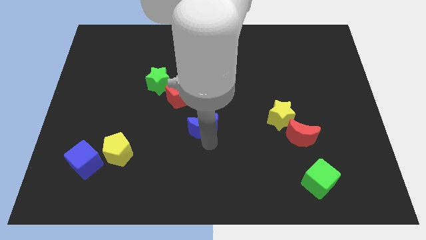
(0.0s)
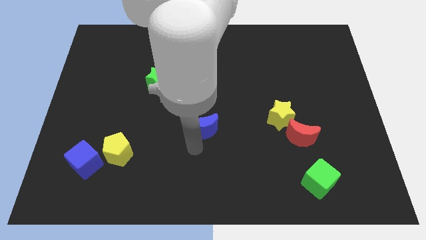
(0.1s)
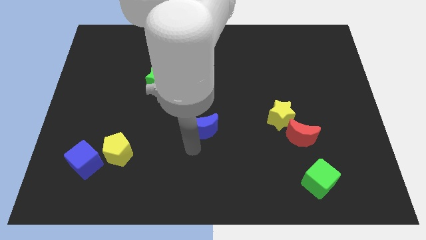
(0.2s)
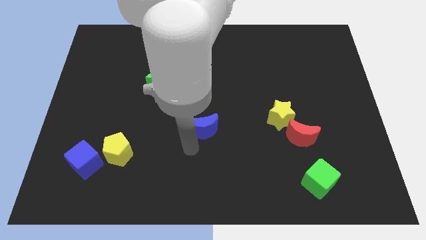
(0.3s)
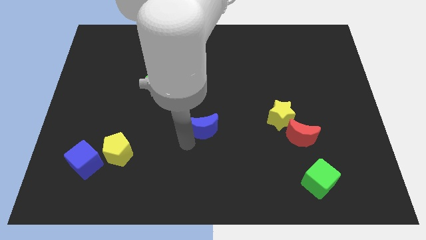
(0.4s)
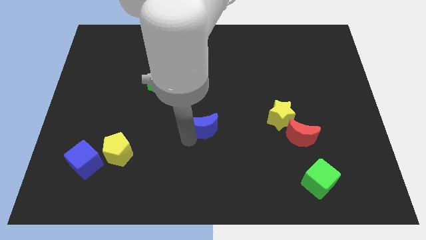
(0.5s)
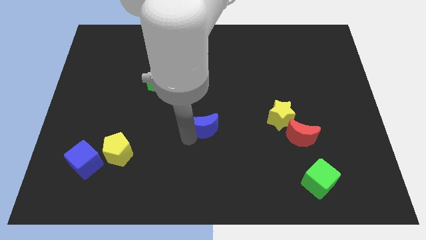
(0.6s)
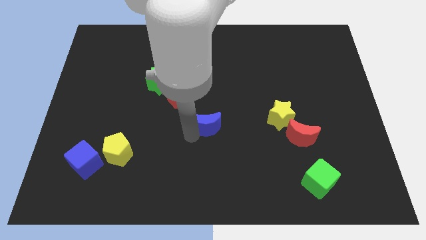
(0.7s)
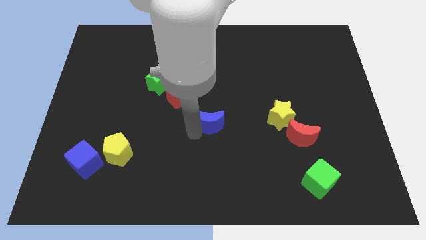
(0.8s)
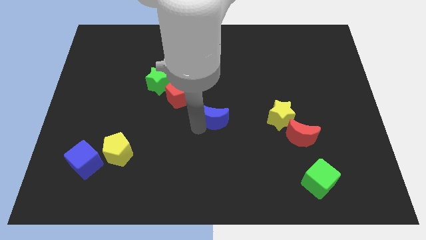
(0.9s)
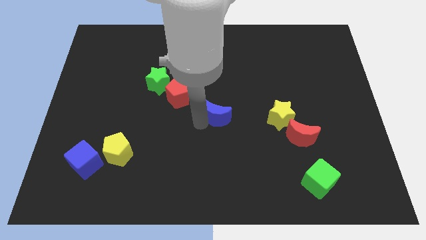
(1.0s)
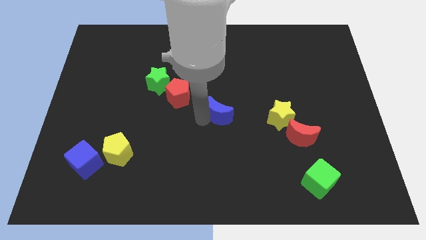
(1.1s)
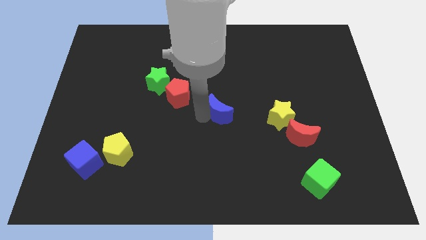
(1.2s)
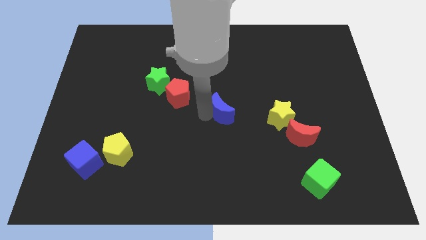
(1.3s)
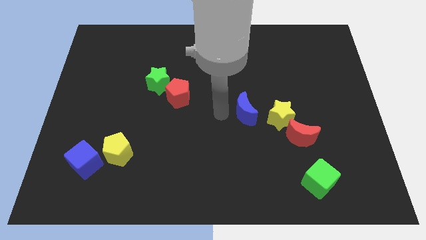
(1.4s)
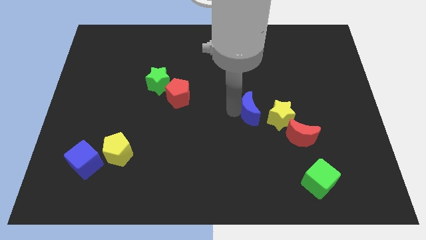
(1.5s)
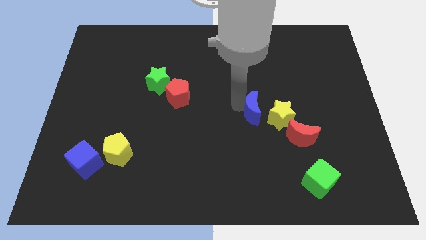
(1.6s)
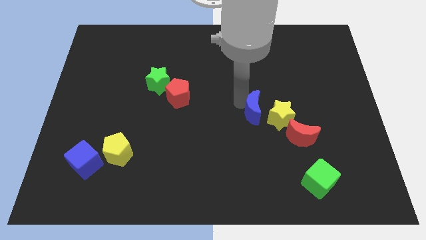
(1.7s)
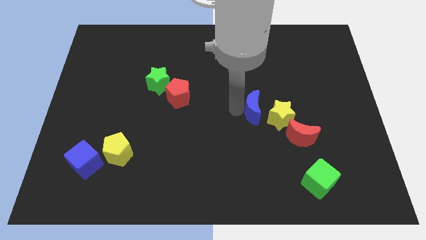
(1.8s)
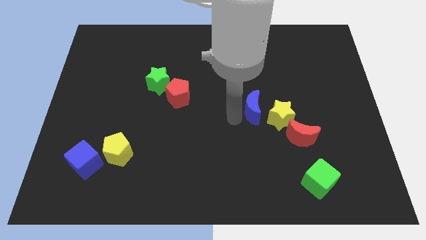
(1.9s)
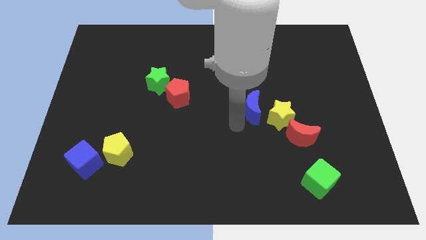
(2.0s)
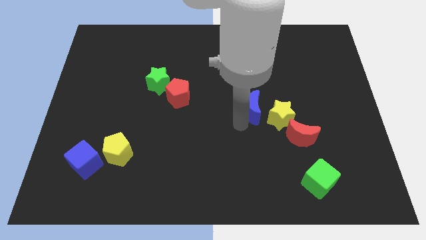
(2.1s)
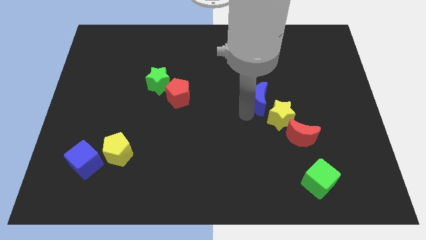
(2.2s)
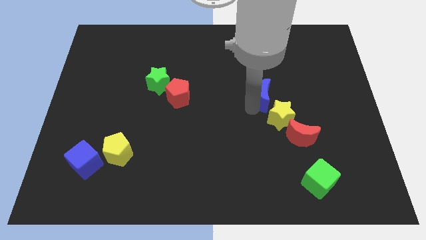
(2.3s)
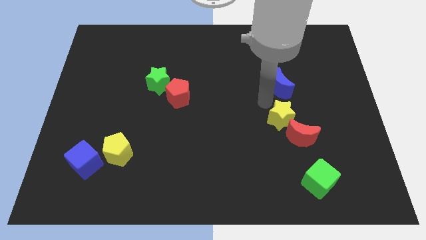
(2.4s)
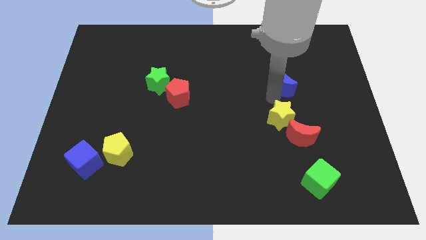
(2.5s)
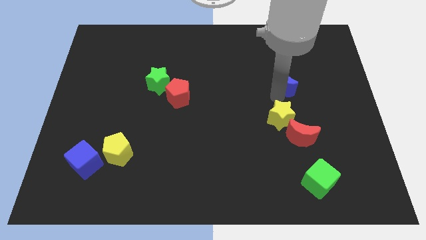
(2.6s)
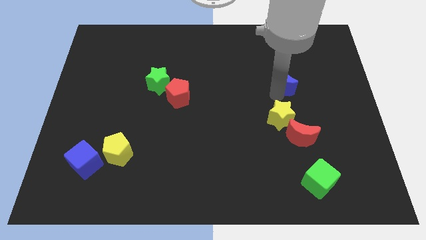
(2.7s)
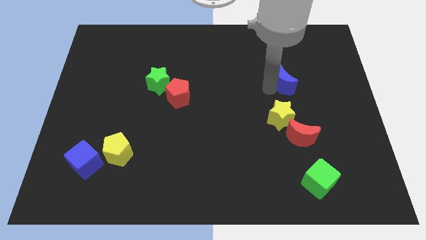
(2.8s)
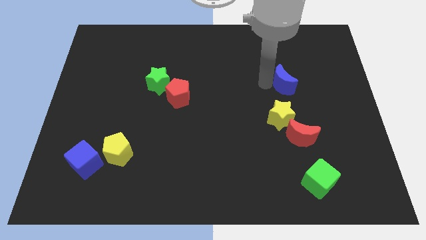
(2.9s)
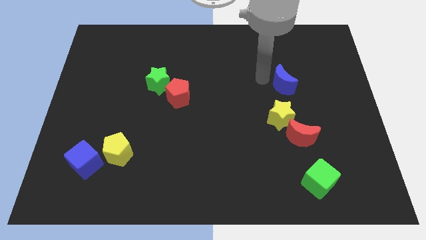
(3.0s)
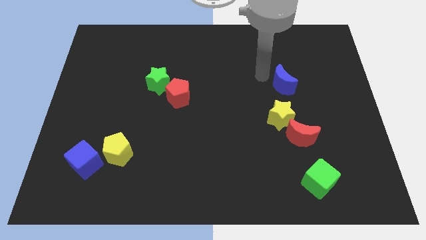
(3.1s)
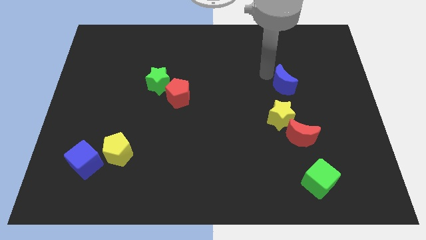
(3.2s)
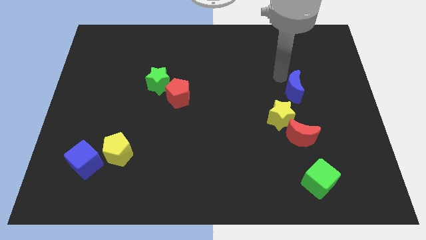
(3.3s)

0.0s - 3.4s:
place the blue crescent above the yellow star

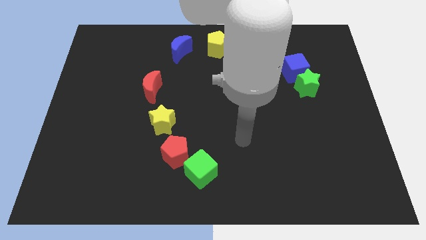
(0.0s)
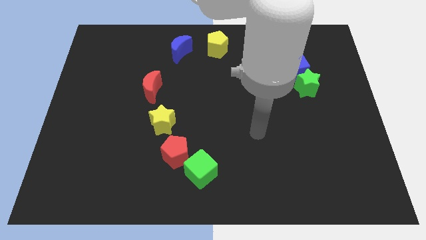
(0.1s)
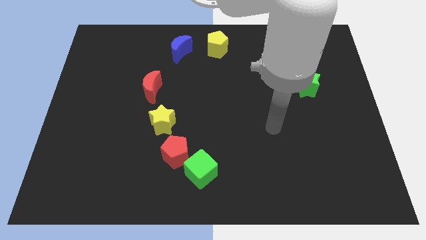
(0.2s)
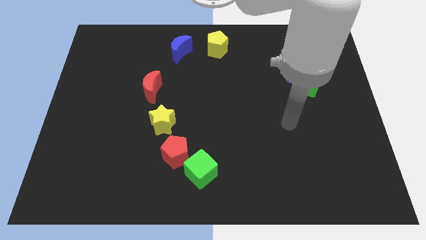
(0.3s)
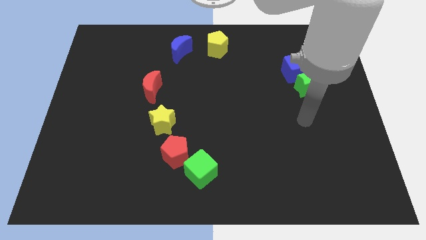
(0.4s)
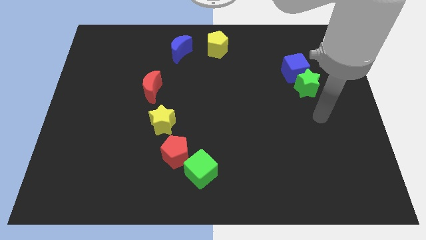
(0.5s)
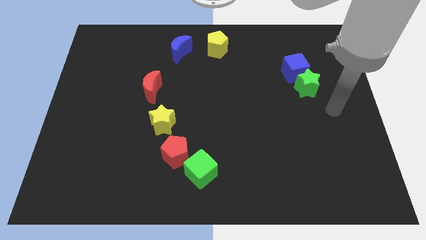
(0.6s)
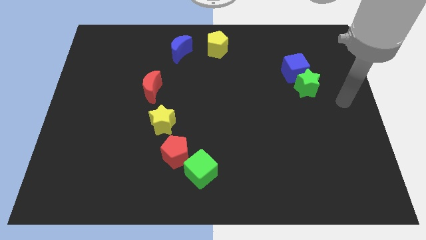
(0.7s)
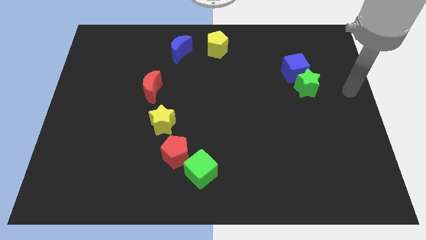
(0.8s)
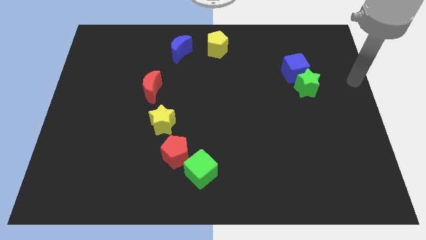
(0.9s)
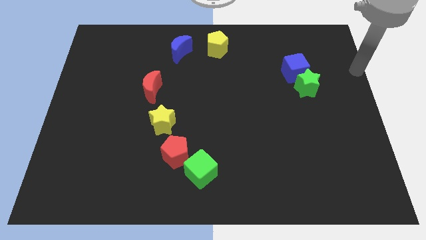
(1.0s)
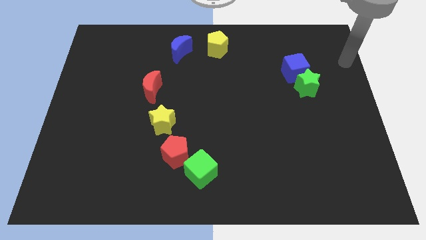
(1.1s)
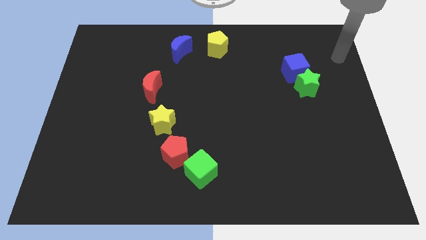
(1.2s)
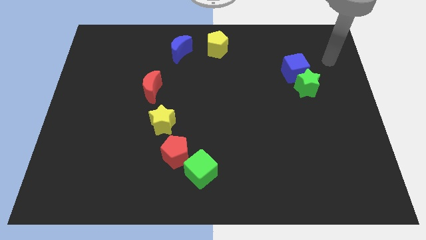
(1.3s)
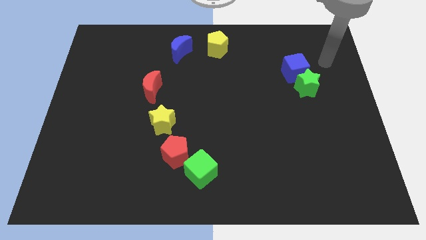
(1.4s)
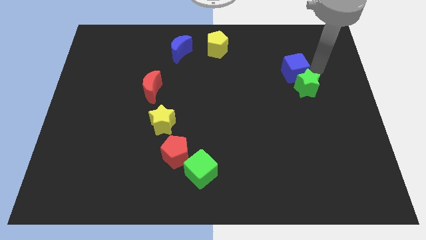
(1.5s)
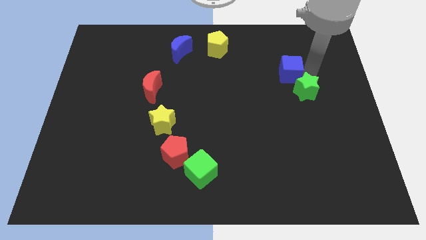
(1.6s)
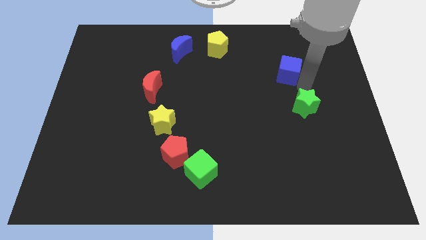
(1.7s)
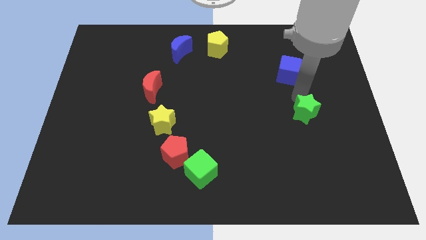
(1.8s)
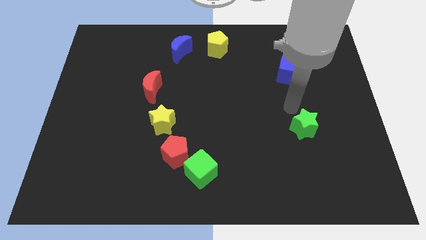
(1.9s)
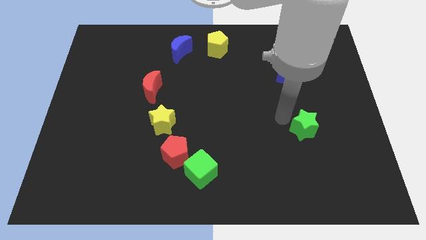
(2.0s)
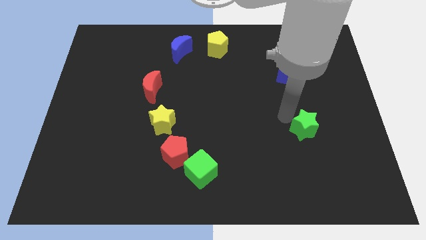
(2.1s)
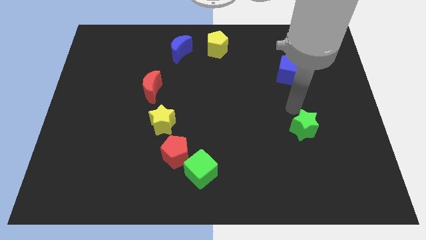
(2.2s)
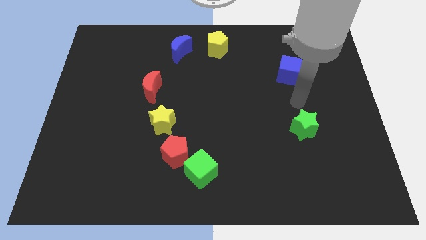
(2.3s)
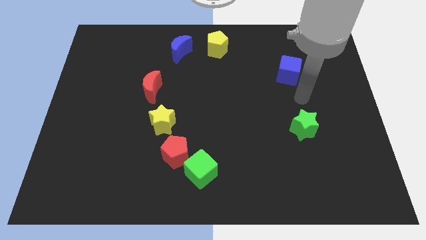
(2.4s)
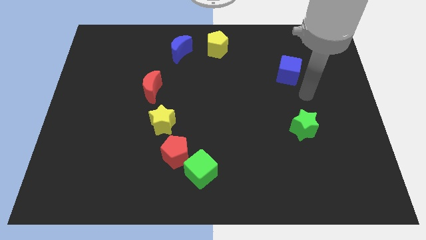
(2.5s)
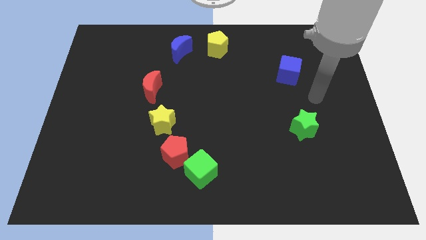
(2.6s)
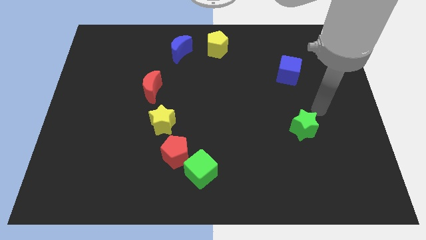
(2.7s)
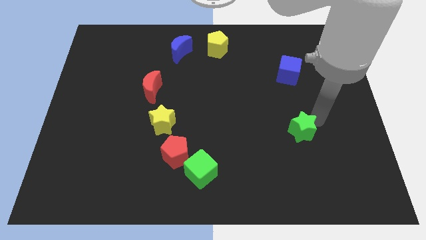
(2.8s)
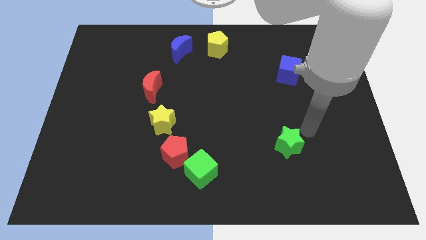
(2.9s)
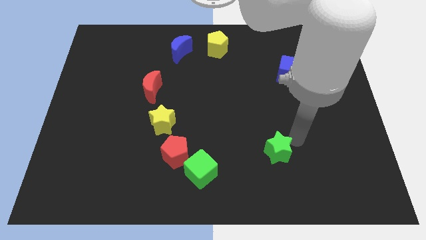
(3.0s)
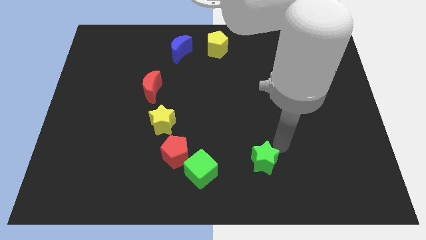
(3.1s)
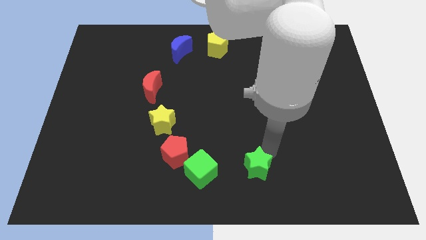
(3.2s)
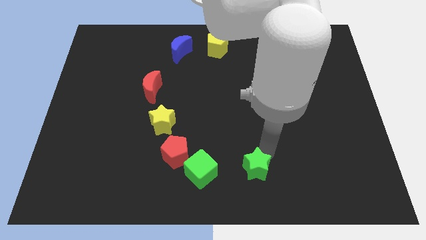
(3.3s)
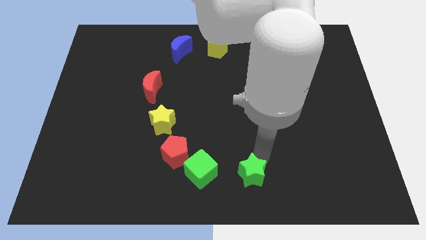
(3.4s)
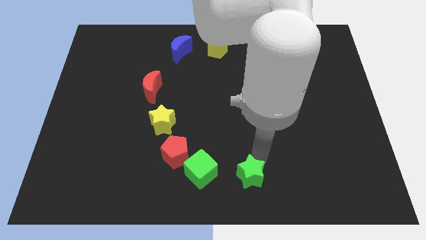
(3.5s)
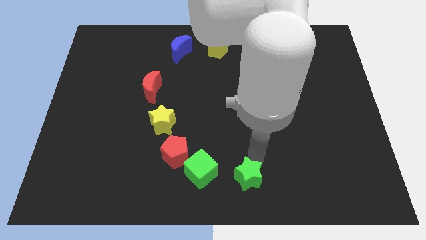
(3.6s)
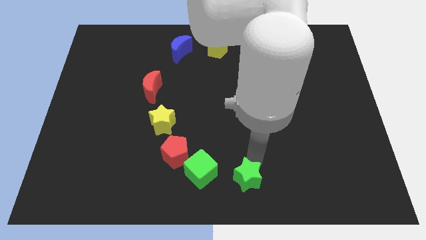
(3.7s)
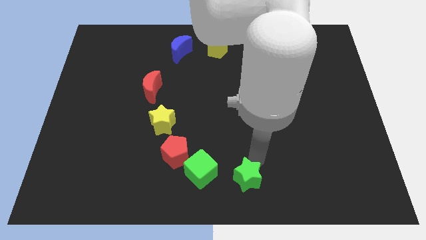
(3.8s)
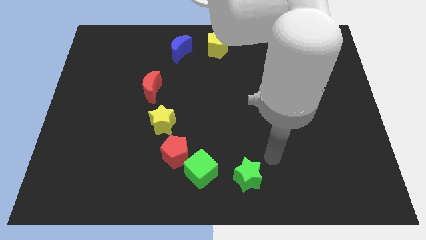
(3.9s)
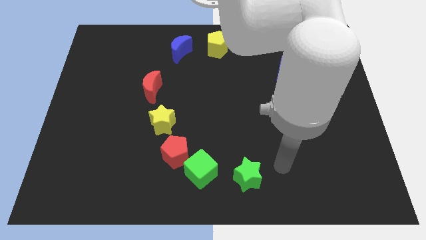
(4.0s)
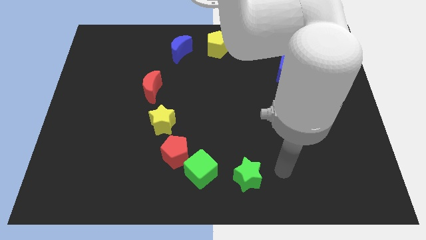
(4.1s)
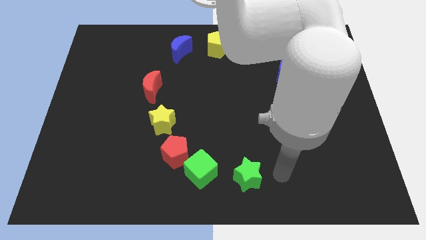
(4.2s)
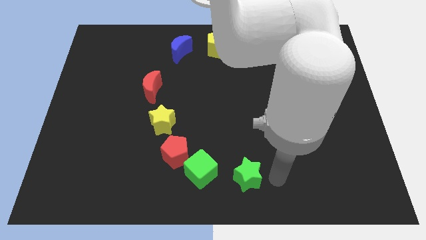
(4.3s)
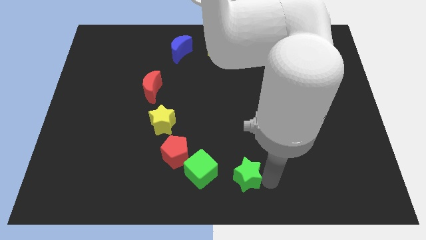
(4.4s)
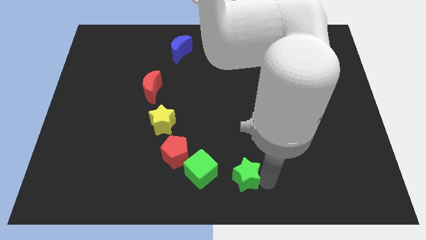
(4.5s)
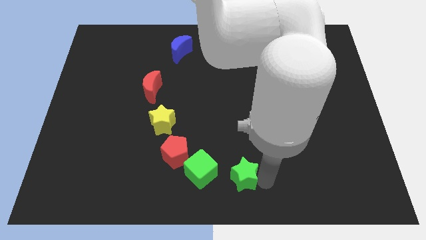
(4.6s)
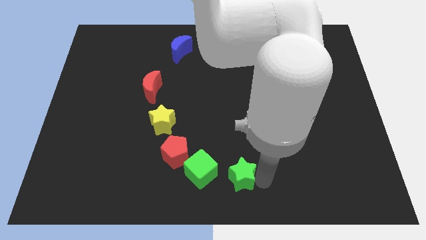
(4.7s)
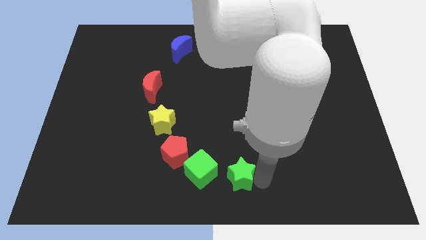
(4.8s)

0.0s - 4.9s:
move the green star to the right of the green cube

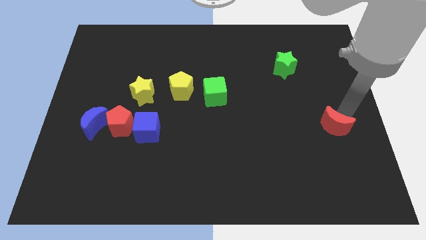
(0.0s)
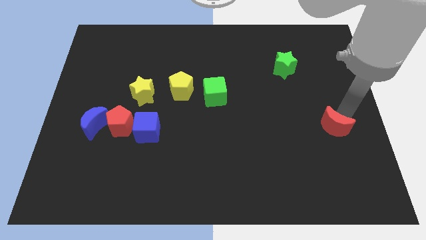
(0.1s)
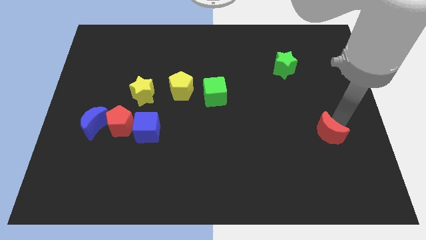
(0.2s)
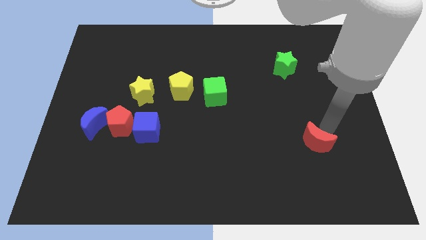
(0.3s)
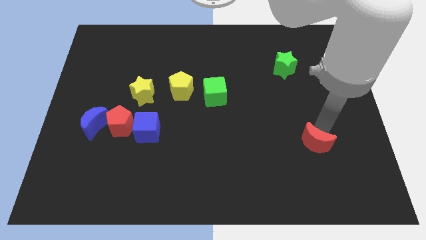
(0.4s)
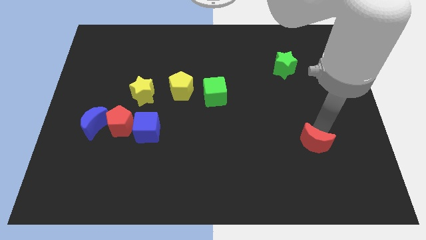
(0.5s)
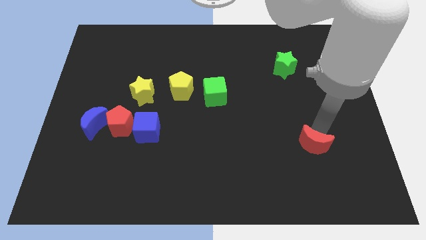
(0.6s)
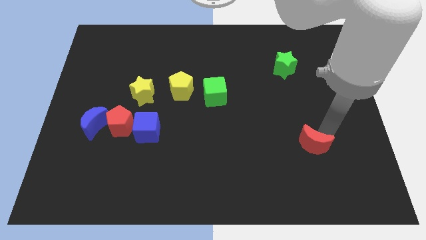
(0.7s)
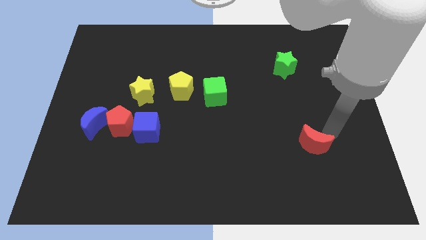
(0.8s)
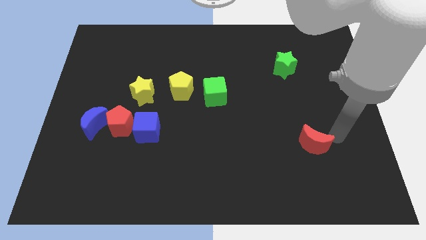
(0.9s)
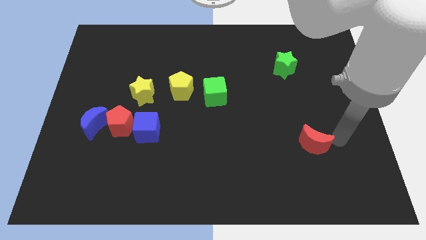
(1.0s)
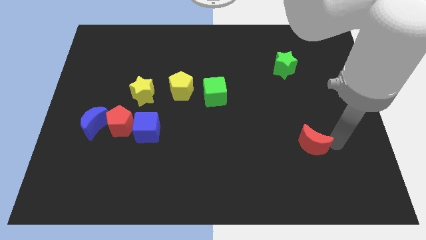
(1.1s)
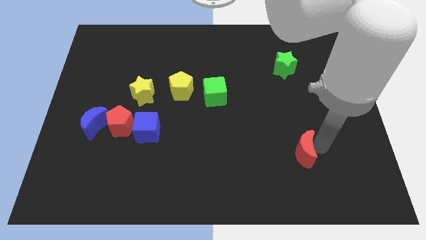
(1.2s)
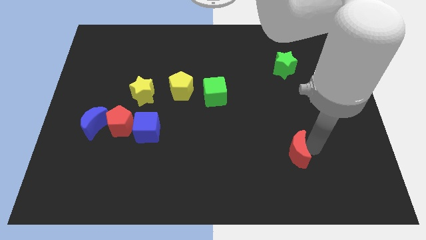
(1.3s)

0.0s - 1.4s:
drag the red moon slightly downwards
